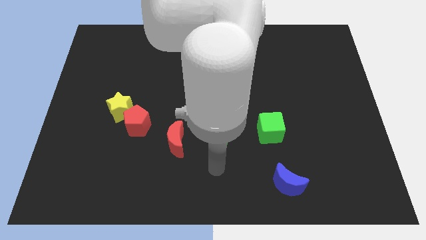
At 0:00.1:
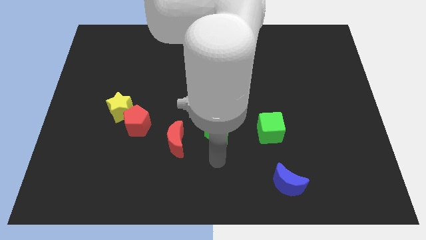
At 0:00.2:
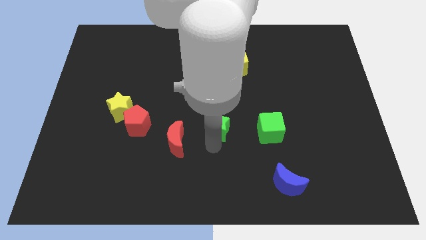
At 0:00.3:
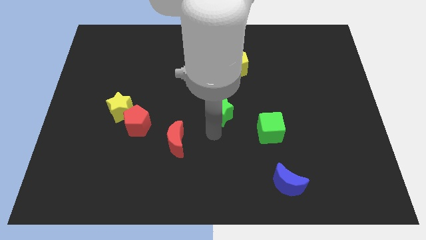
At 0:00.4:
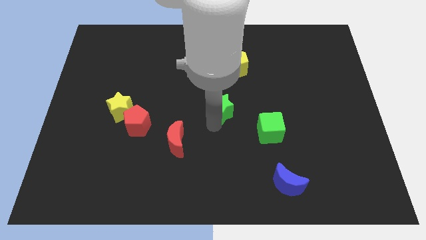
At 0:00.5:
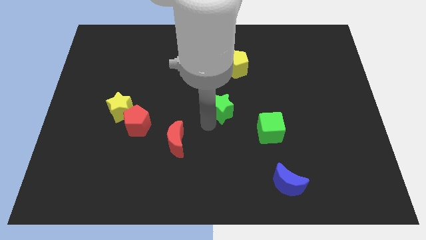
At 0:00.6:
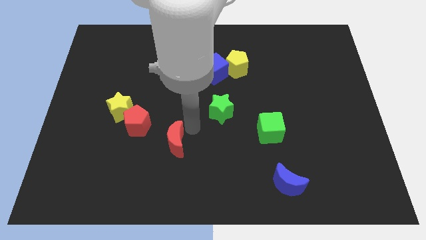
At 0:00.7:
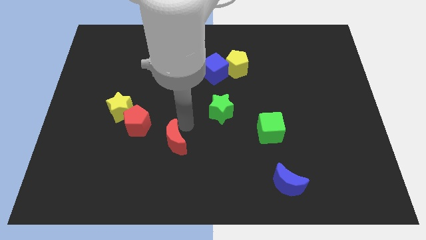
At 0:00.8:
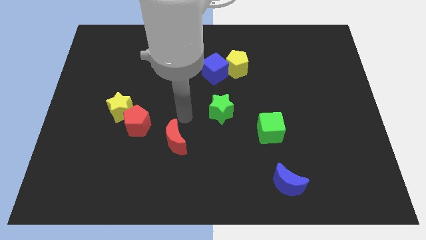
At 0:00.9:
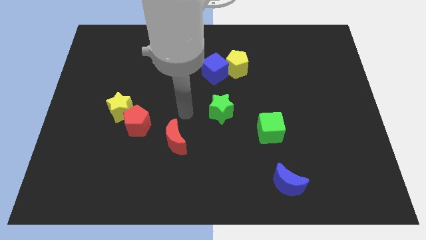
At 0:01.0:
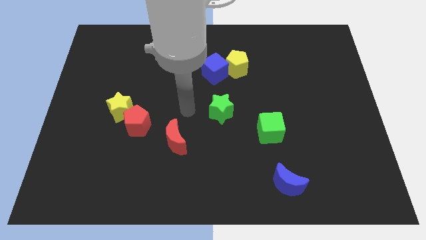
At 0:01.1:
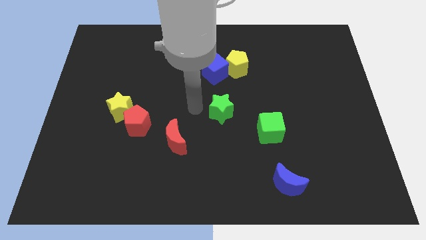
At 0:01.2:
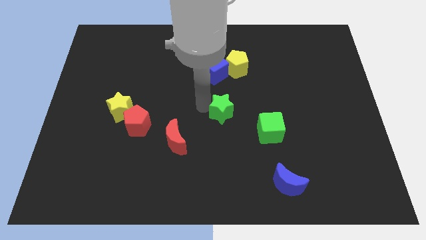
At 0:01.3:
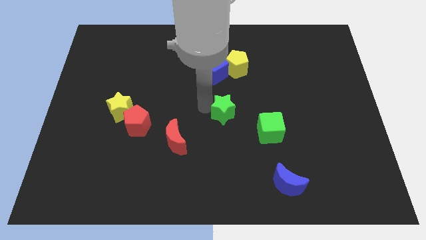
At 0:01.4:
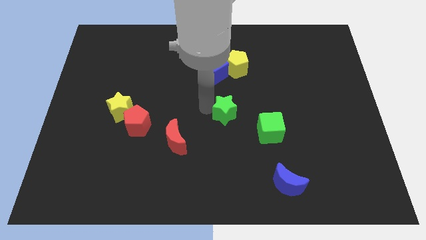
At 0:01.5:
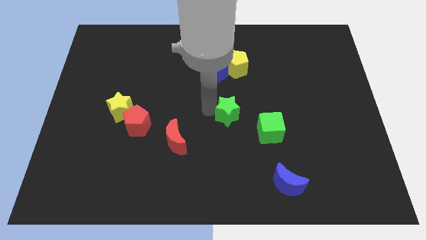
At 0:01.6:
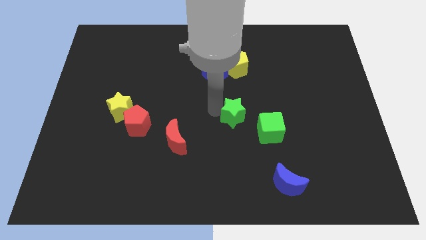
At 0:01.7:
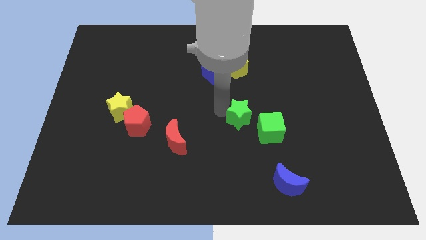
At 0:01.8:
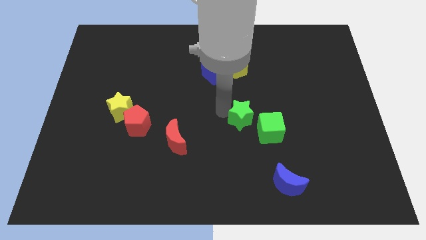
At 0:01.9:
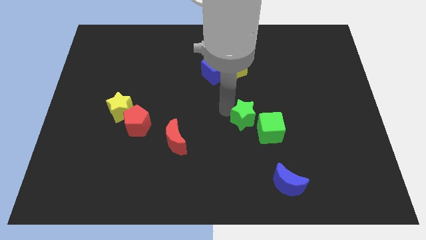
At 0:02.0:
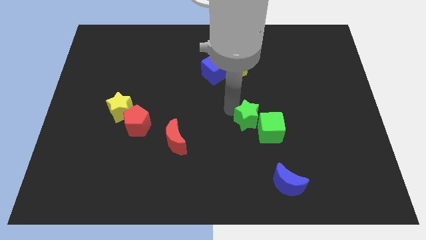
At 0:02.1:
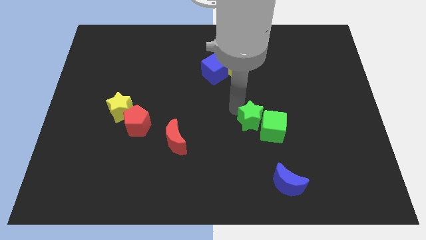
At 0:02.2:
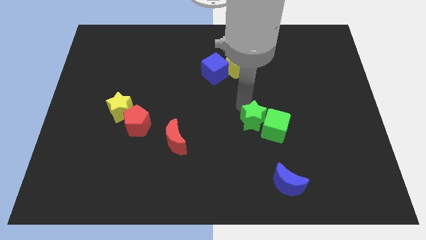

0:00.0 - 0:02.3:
place the green star beside the green cube

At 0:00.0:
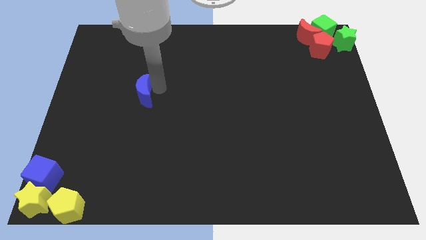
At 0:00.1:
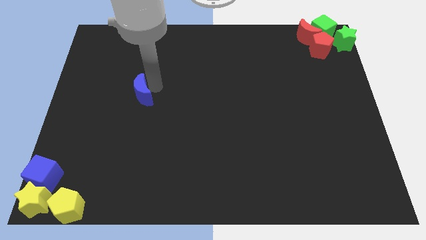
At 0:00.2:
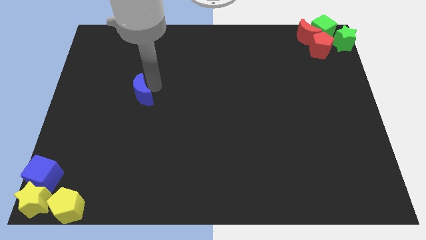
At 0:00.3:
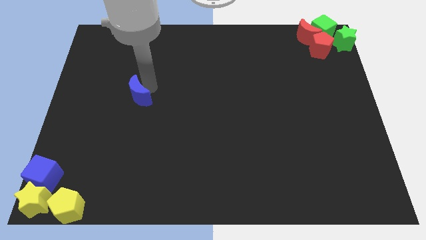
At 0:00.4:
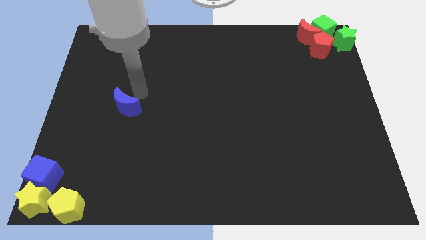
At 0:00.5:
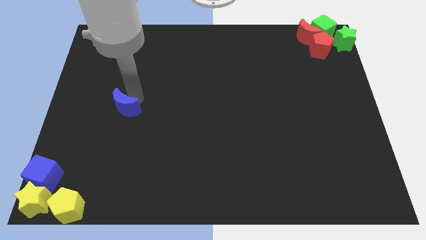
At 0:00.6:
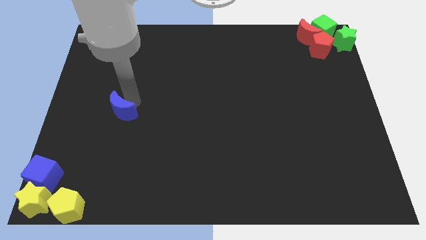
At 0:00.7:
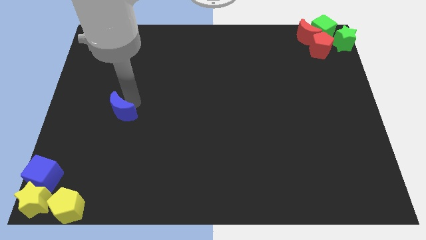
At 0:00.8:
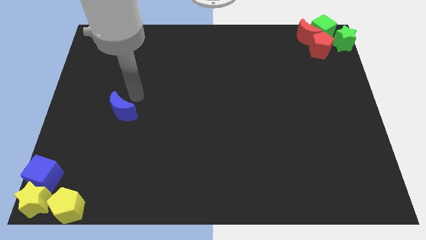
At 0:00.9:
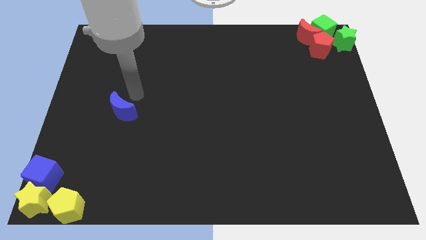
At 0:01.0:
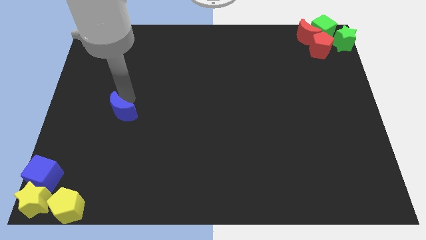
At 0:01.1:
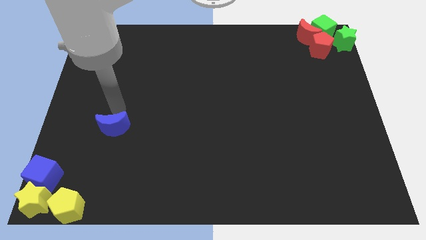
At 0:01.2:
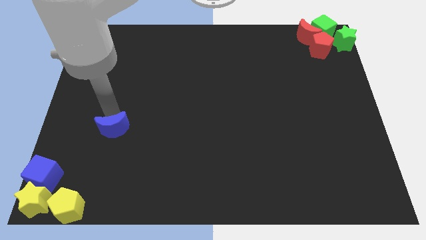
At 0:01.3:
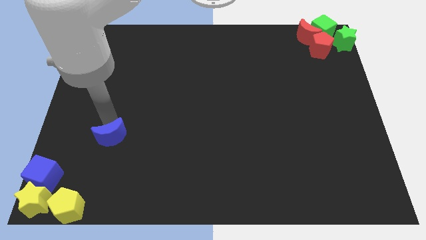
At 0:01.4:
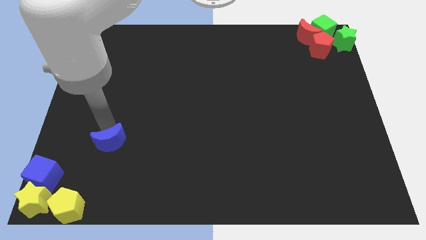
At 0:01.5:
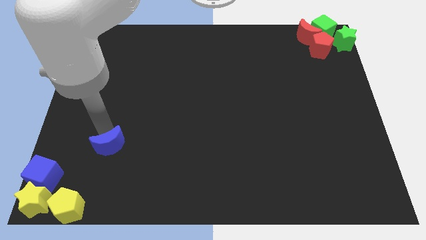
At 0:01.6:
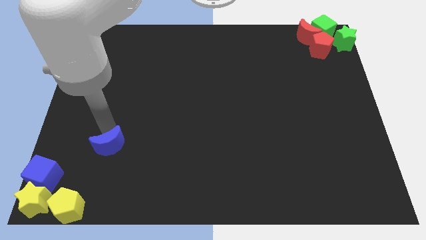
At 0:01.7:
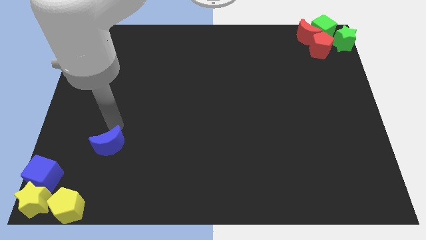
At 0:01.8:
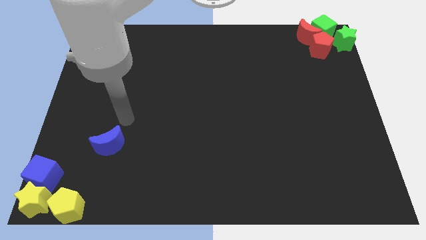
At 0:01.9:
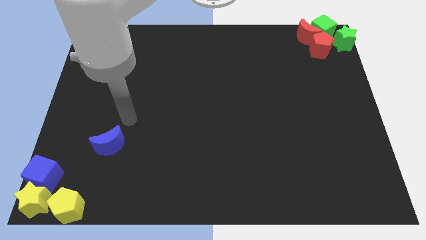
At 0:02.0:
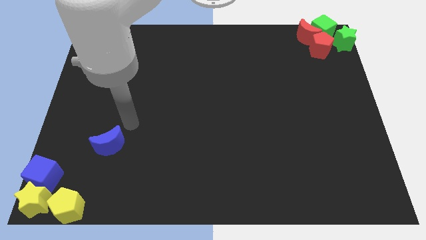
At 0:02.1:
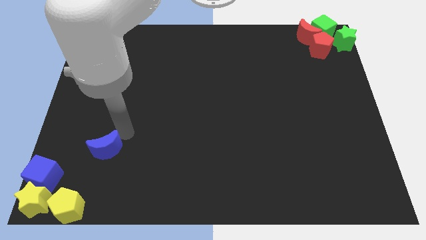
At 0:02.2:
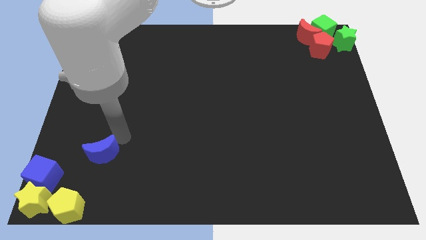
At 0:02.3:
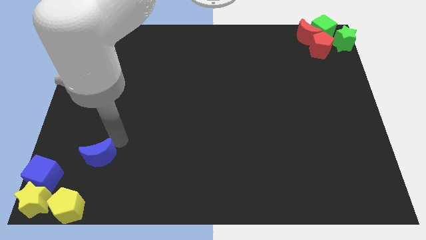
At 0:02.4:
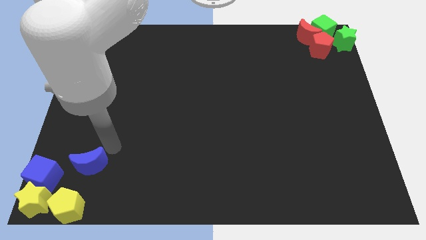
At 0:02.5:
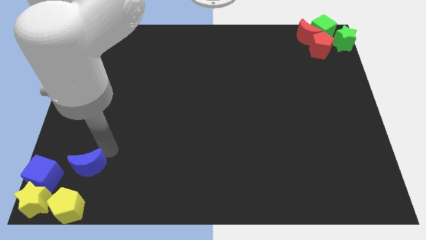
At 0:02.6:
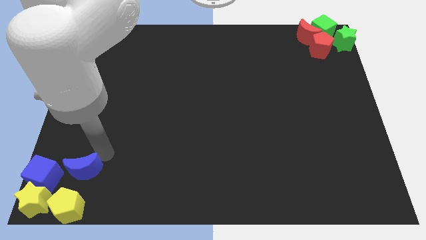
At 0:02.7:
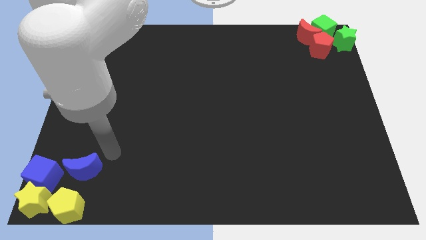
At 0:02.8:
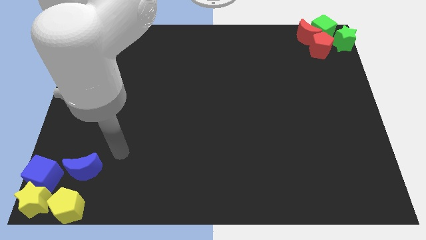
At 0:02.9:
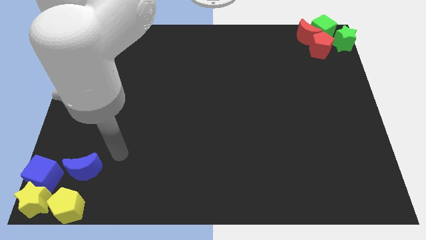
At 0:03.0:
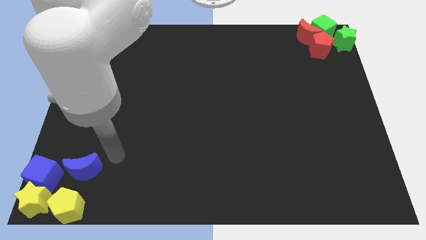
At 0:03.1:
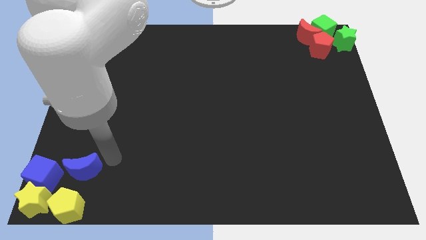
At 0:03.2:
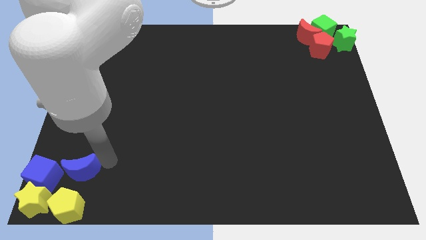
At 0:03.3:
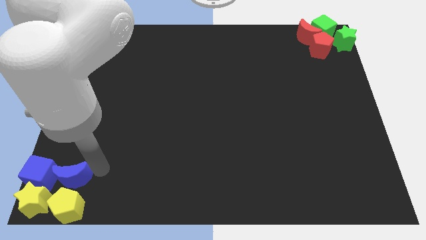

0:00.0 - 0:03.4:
push the blue crescent right to the blue cube

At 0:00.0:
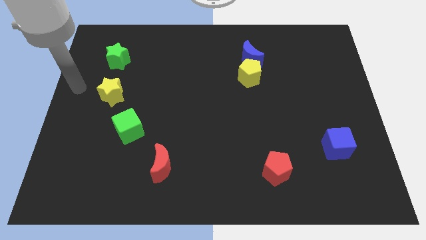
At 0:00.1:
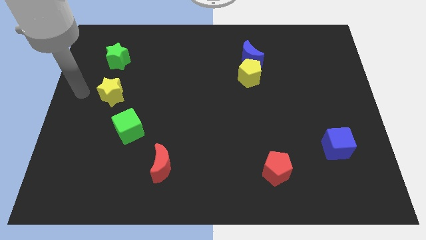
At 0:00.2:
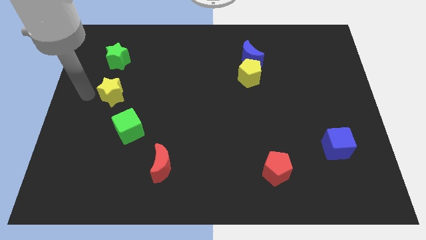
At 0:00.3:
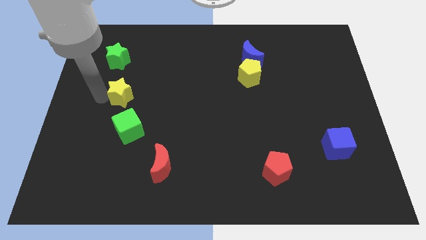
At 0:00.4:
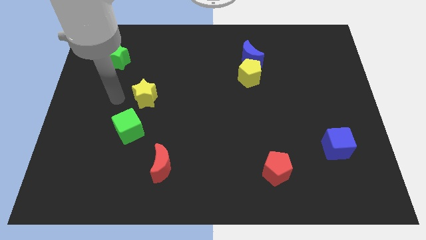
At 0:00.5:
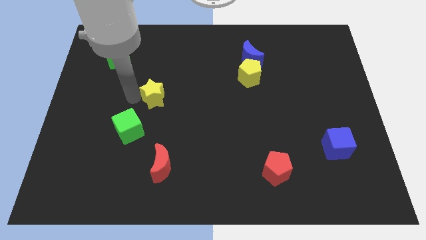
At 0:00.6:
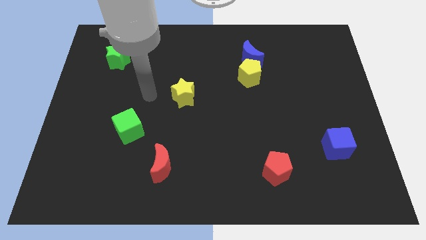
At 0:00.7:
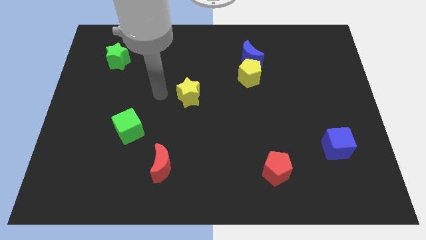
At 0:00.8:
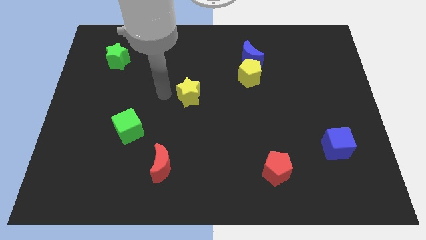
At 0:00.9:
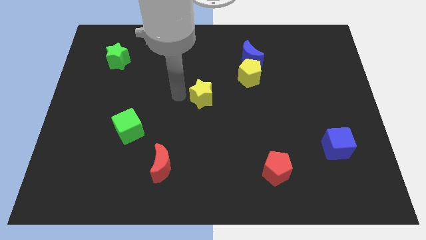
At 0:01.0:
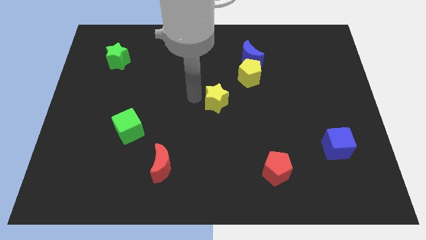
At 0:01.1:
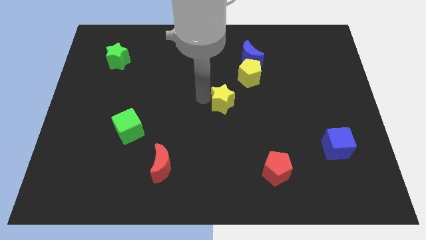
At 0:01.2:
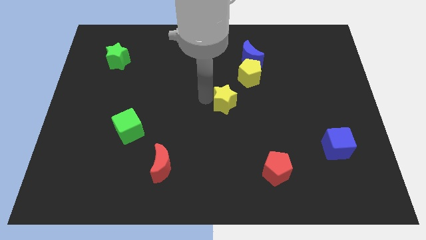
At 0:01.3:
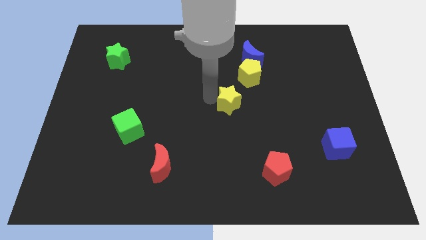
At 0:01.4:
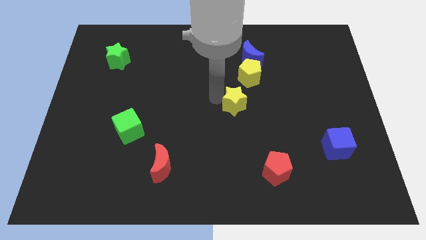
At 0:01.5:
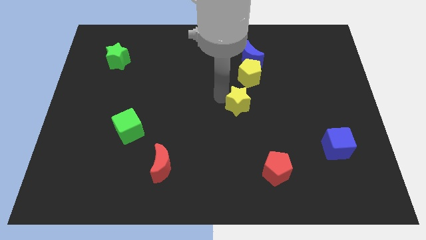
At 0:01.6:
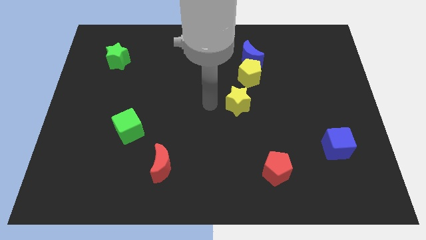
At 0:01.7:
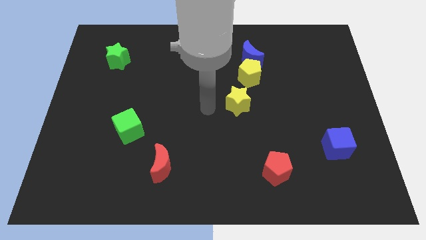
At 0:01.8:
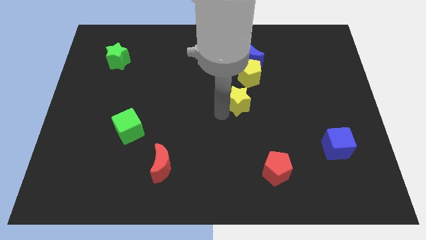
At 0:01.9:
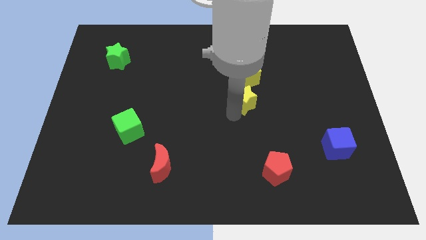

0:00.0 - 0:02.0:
push the yellow star to the bottom of the yellow pentagon

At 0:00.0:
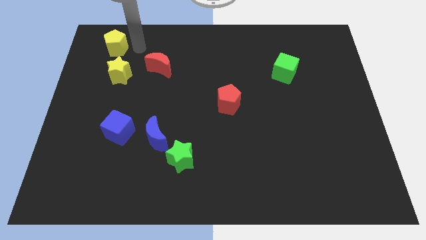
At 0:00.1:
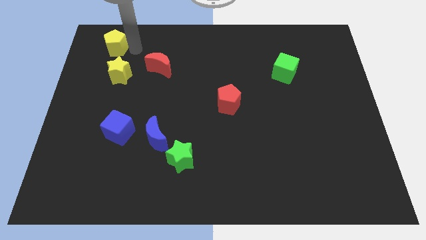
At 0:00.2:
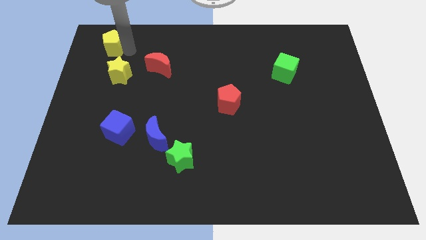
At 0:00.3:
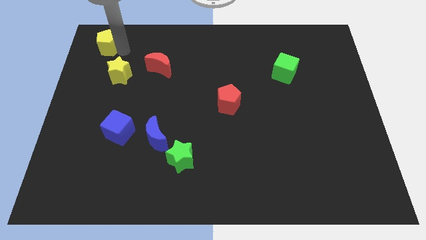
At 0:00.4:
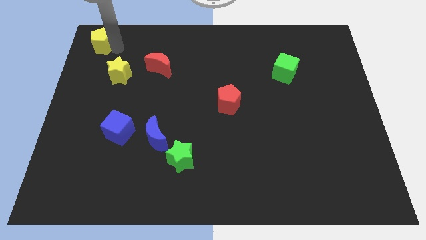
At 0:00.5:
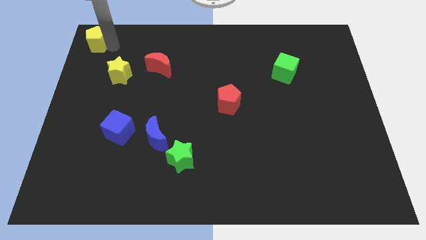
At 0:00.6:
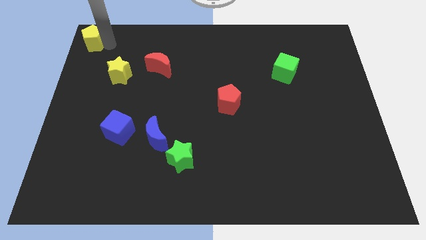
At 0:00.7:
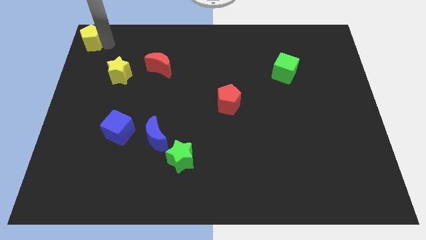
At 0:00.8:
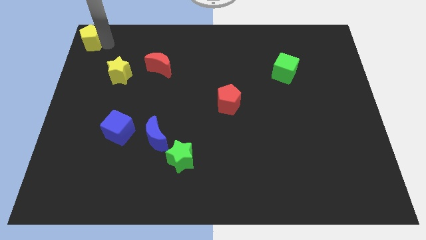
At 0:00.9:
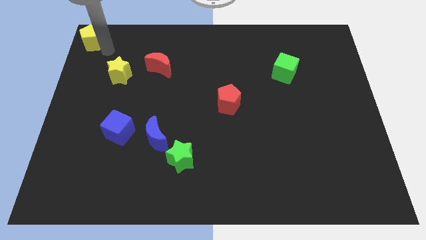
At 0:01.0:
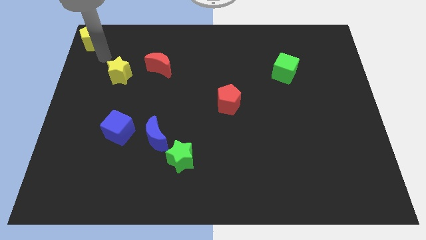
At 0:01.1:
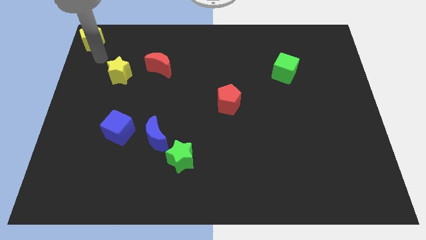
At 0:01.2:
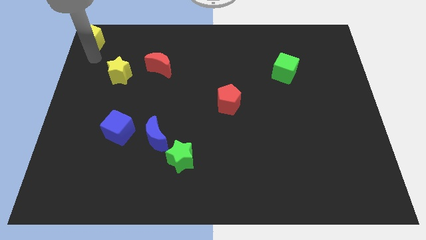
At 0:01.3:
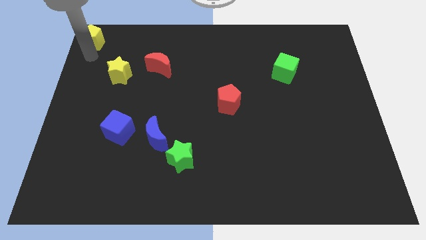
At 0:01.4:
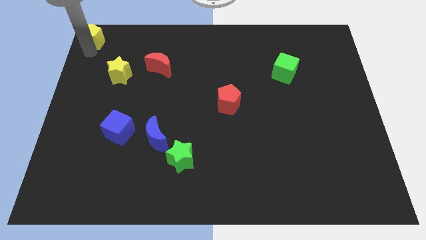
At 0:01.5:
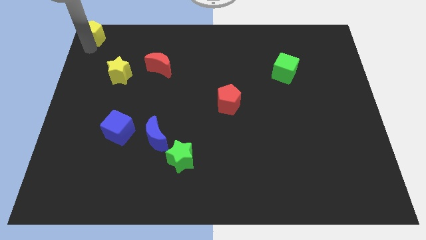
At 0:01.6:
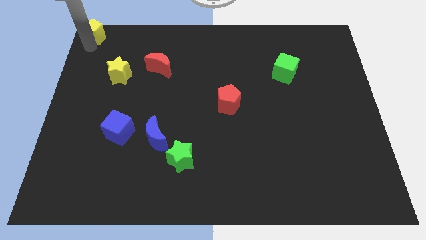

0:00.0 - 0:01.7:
push the yellow pentagon to the top left
